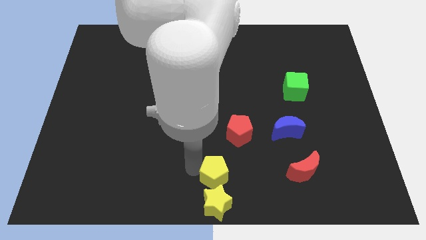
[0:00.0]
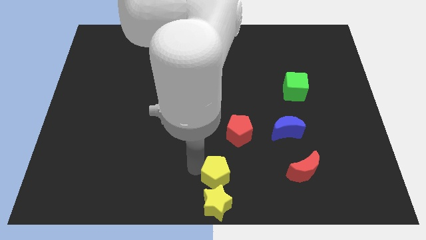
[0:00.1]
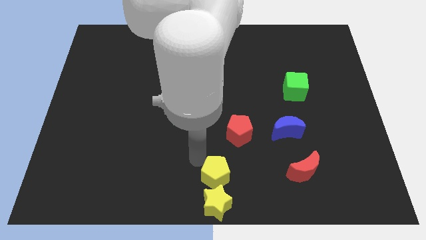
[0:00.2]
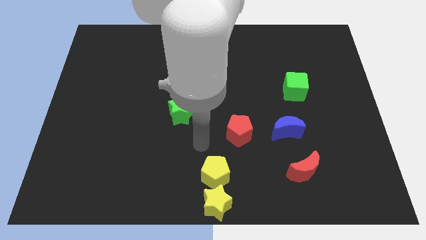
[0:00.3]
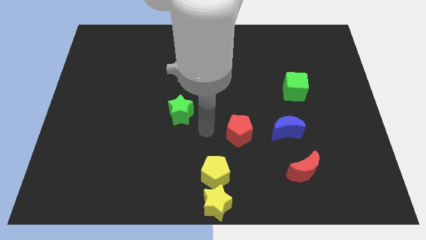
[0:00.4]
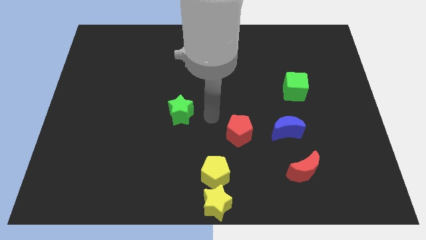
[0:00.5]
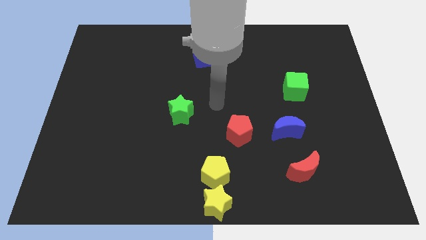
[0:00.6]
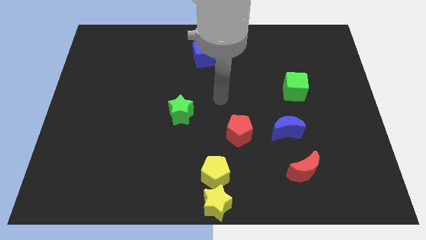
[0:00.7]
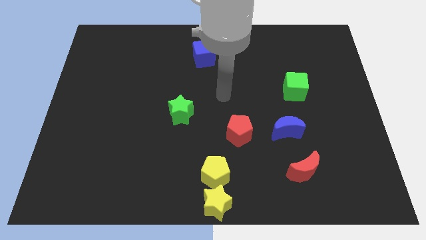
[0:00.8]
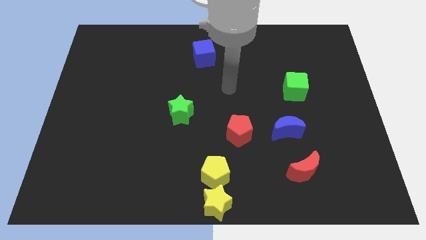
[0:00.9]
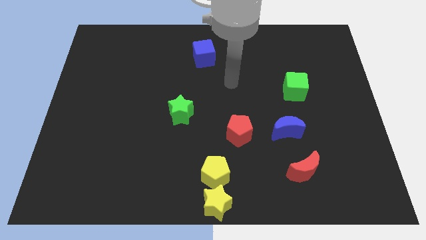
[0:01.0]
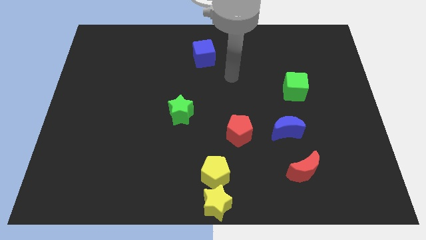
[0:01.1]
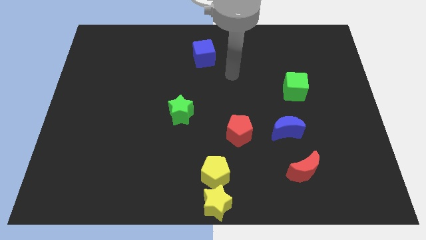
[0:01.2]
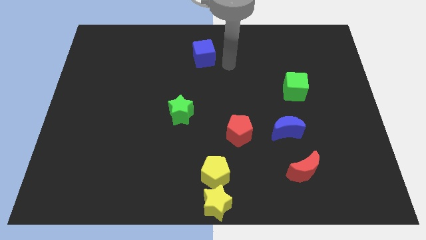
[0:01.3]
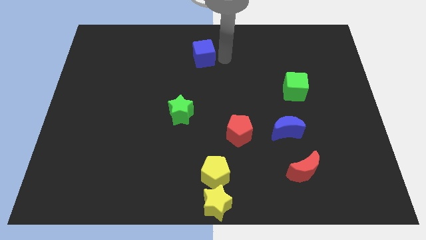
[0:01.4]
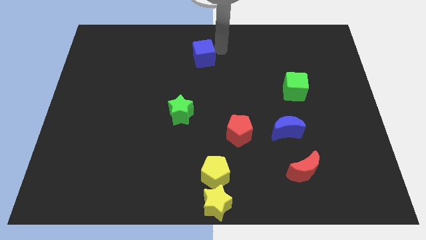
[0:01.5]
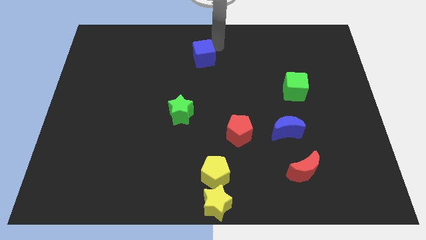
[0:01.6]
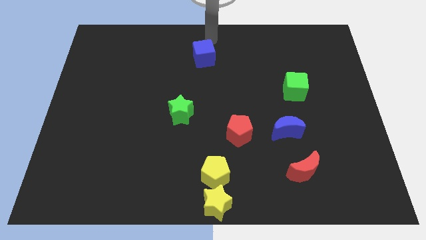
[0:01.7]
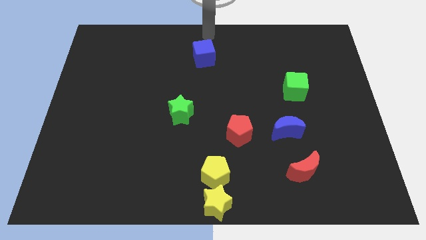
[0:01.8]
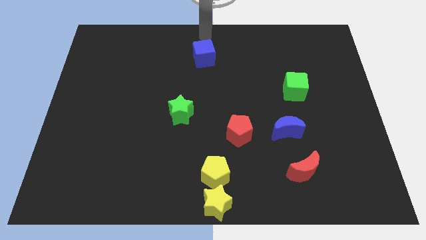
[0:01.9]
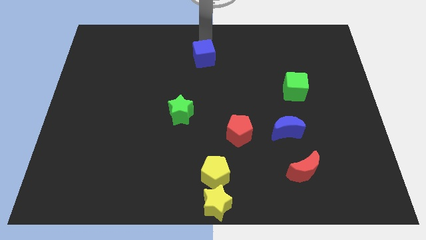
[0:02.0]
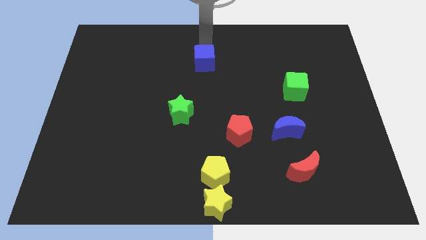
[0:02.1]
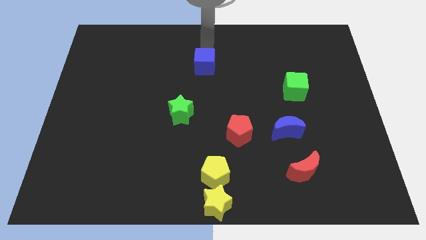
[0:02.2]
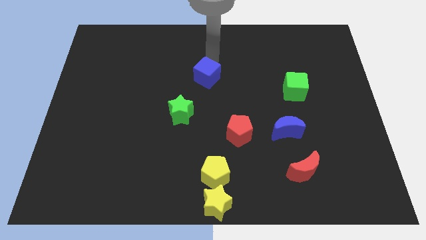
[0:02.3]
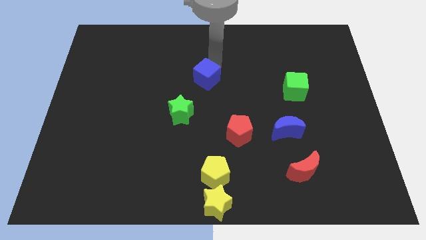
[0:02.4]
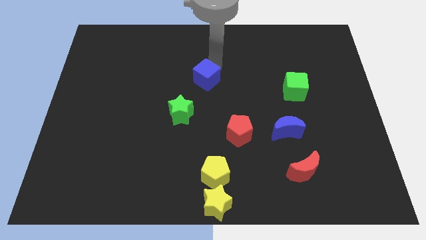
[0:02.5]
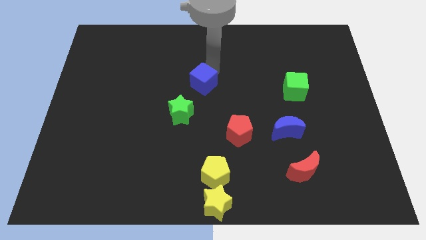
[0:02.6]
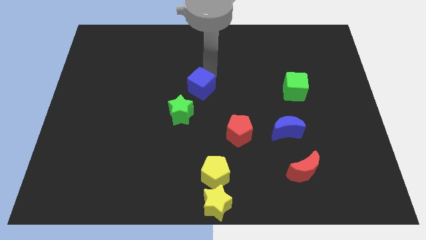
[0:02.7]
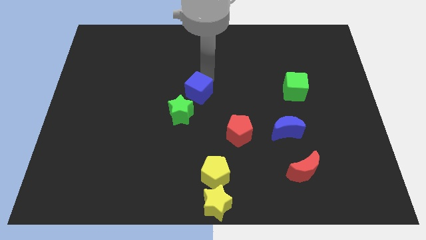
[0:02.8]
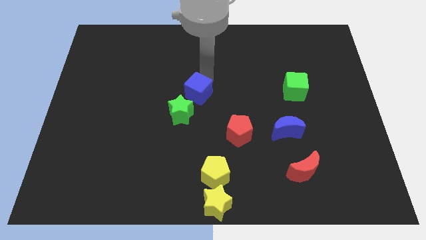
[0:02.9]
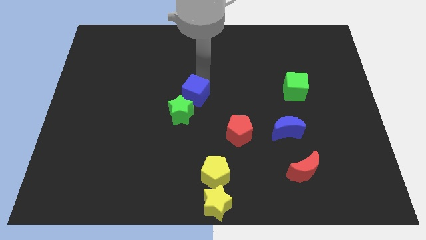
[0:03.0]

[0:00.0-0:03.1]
push the blue cube close to the green star

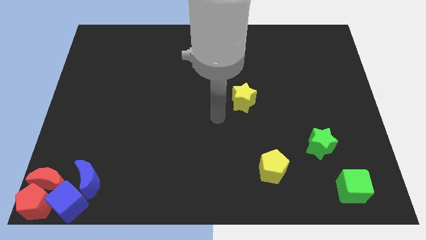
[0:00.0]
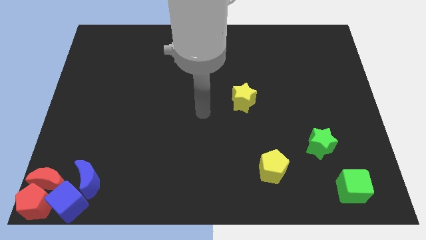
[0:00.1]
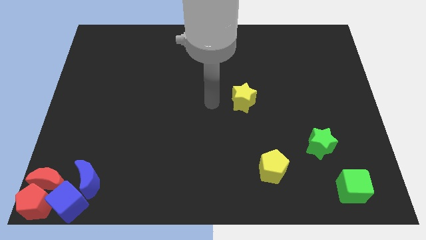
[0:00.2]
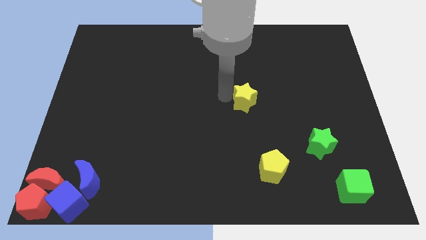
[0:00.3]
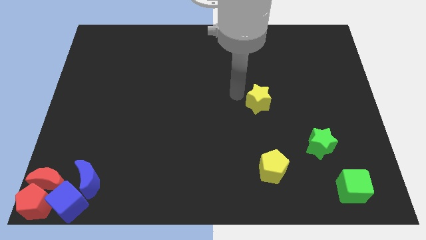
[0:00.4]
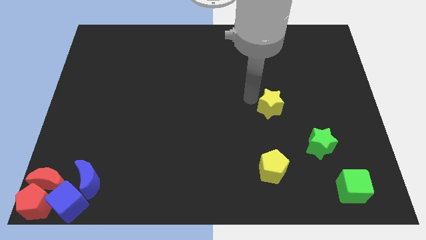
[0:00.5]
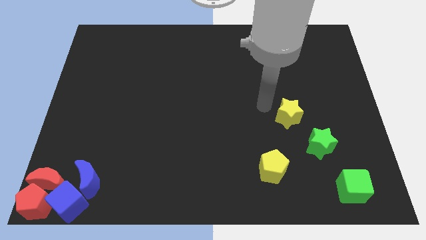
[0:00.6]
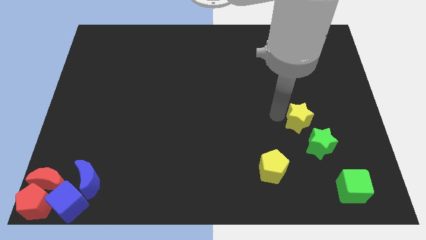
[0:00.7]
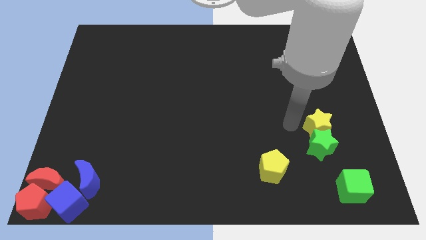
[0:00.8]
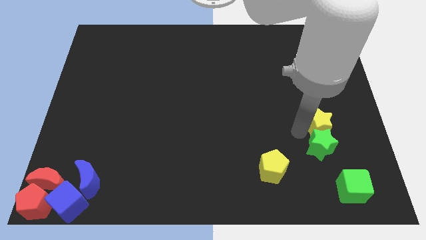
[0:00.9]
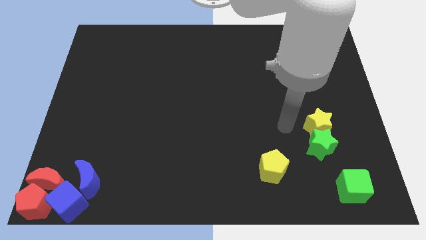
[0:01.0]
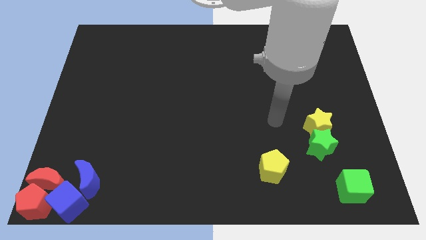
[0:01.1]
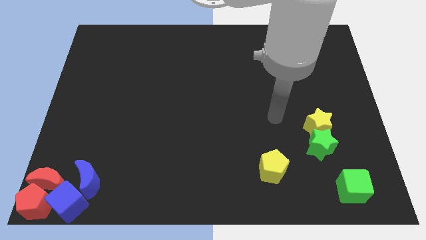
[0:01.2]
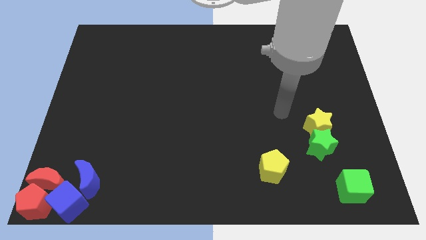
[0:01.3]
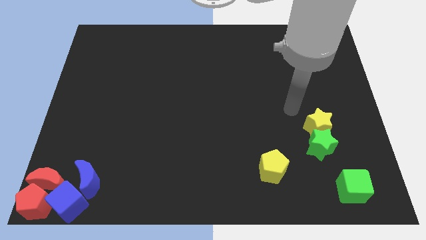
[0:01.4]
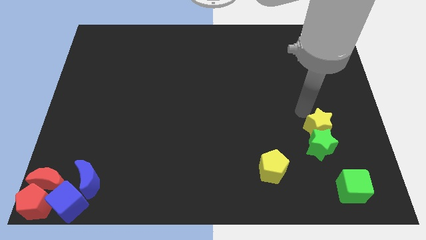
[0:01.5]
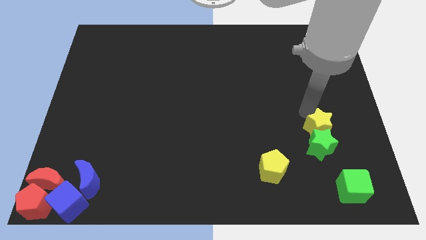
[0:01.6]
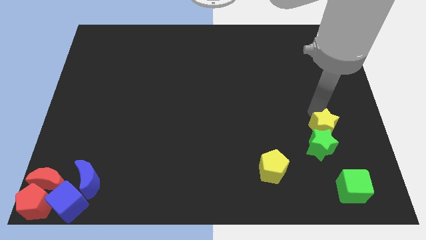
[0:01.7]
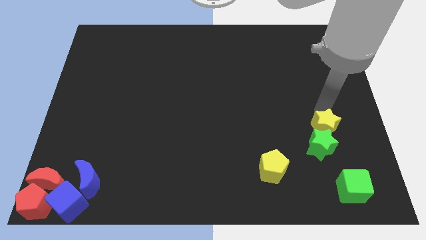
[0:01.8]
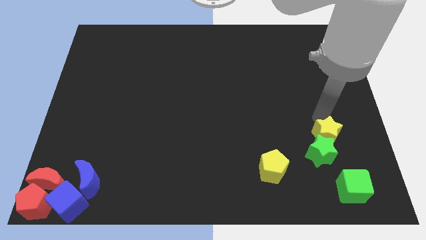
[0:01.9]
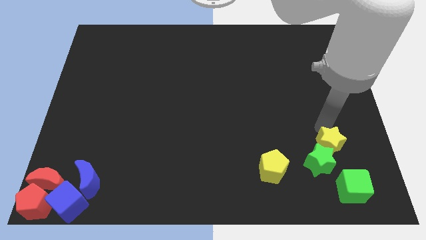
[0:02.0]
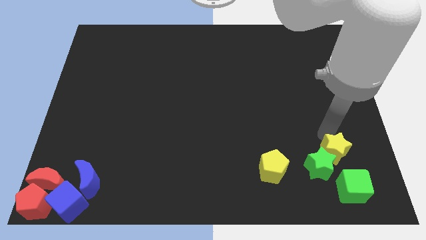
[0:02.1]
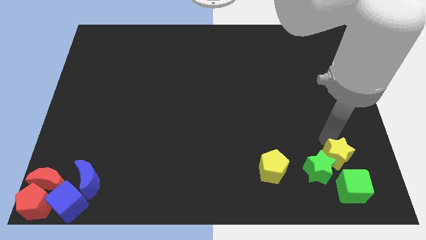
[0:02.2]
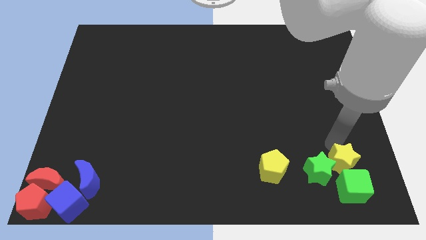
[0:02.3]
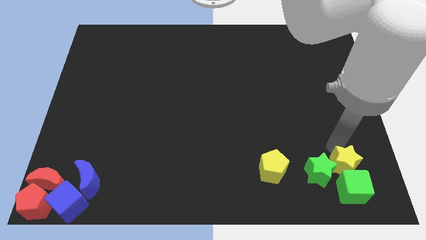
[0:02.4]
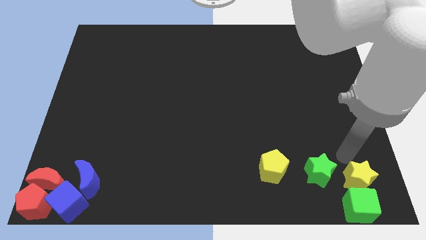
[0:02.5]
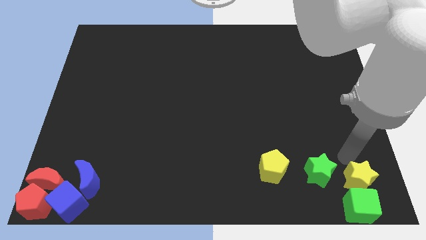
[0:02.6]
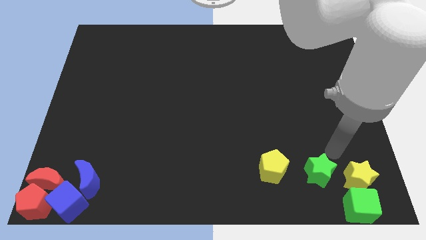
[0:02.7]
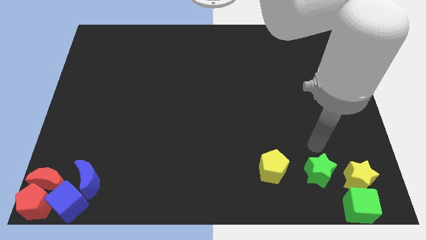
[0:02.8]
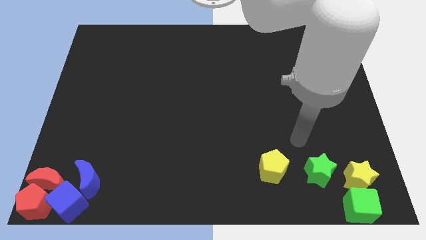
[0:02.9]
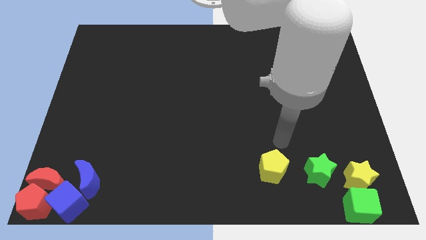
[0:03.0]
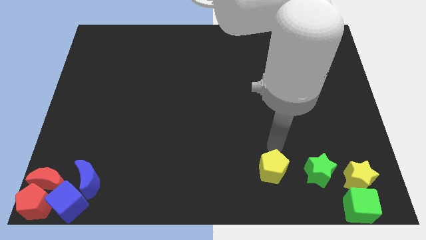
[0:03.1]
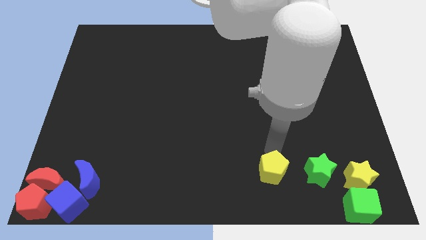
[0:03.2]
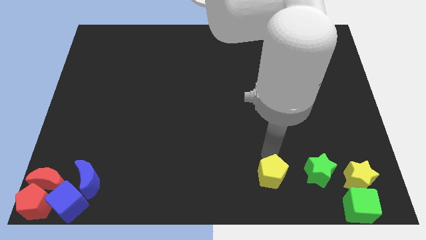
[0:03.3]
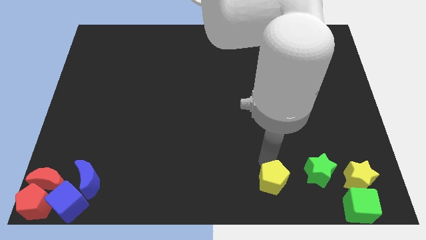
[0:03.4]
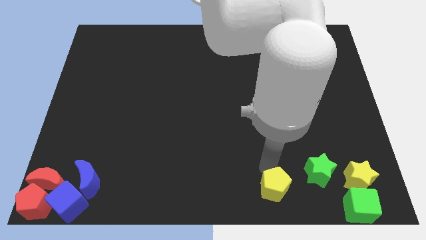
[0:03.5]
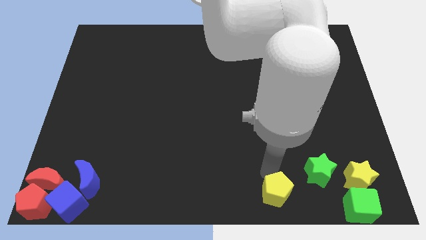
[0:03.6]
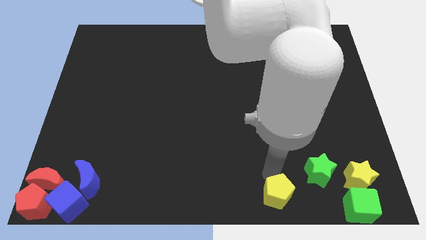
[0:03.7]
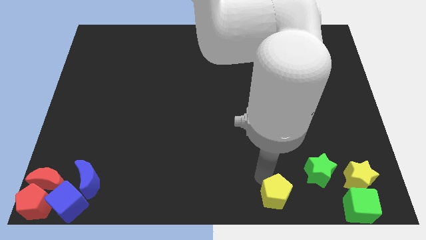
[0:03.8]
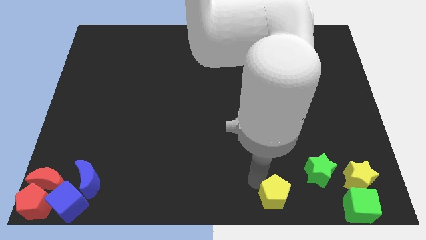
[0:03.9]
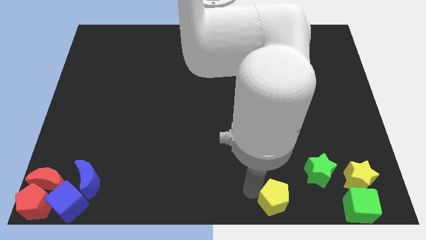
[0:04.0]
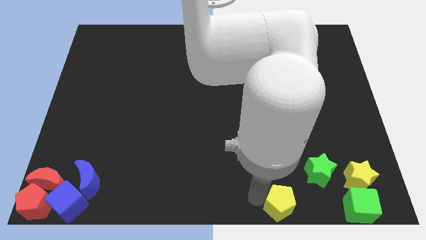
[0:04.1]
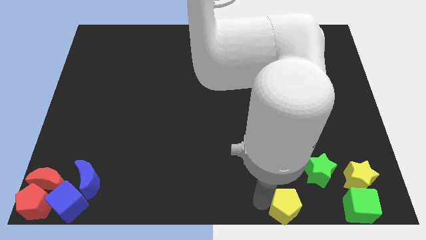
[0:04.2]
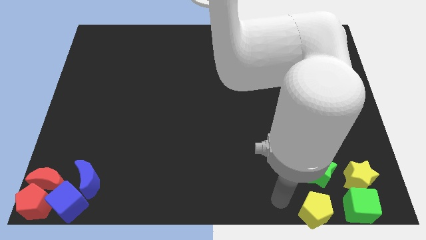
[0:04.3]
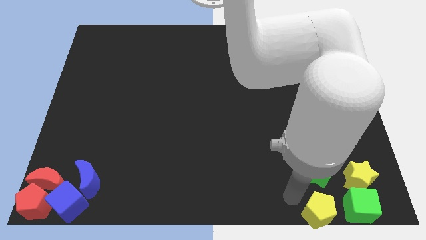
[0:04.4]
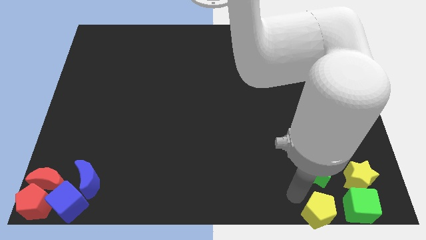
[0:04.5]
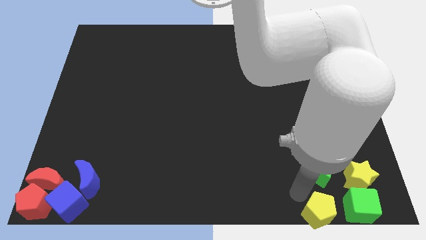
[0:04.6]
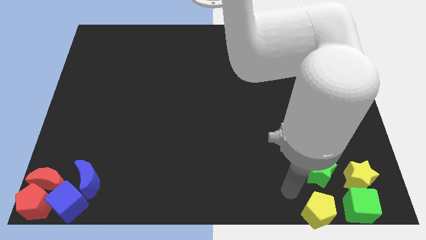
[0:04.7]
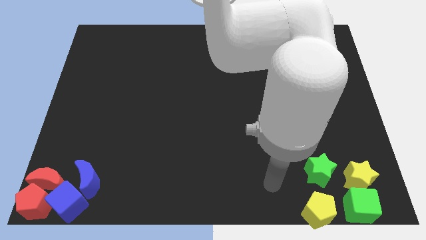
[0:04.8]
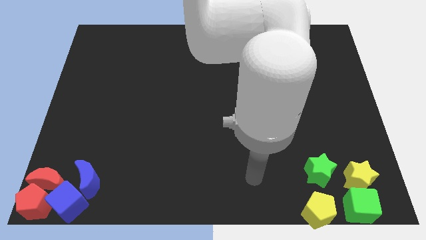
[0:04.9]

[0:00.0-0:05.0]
push all the green and yellow blocks at the bottom right corner of the board

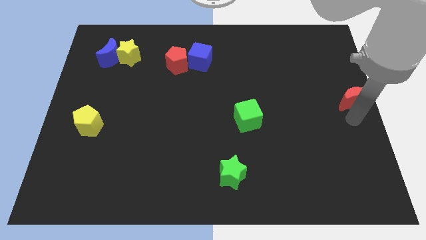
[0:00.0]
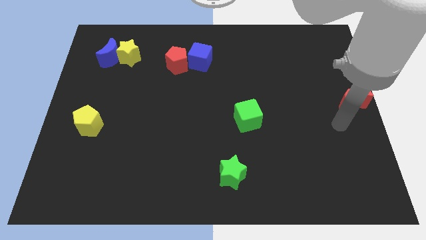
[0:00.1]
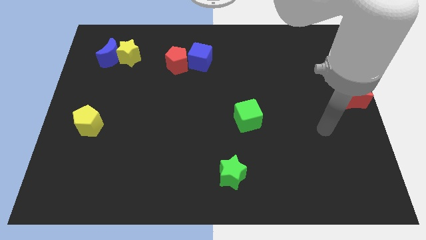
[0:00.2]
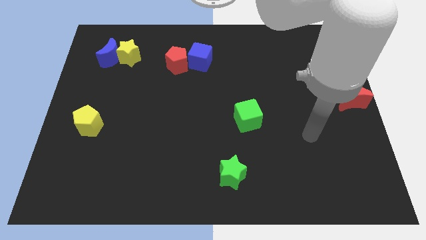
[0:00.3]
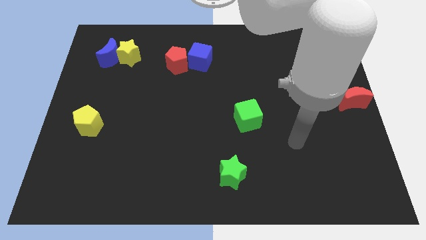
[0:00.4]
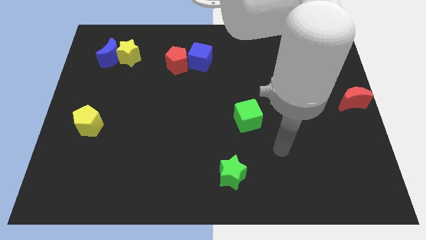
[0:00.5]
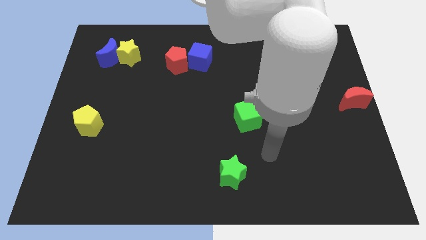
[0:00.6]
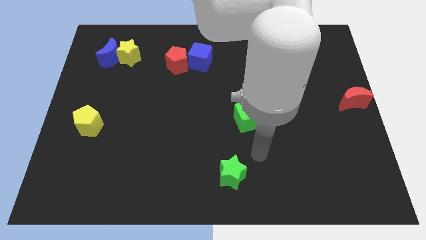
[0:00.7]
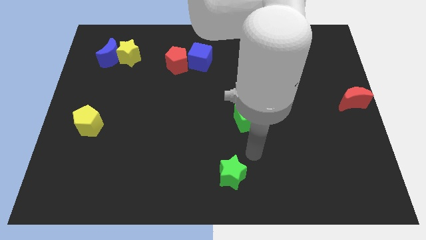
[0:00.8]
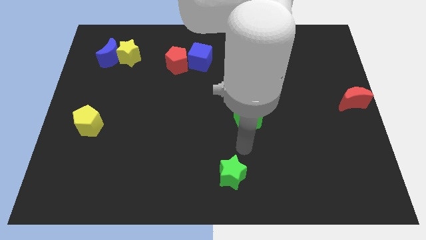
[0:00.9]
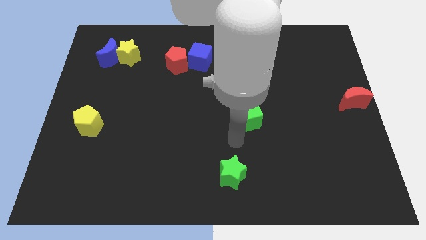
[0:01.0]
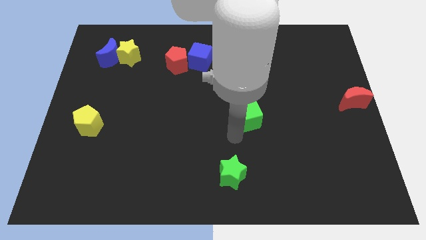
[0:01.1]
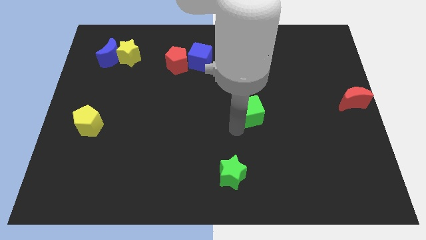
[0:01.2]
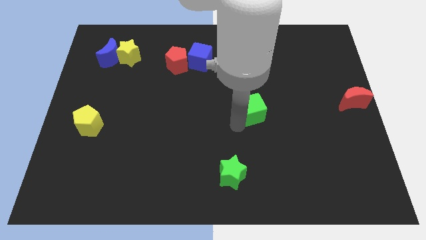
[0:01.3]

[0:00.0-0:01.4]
slightly move the green cube up a bit
